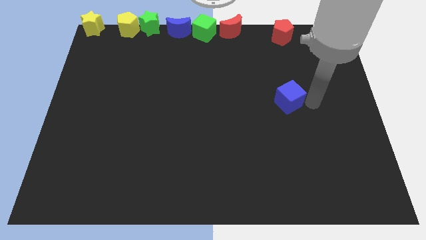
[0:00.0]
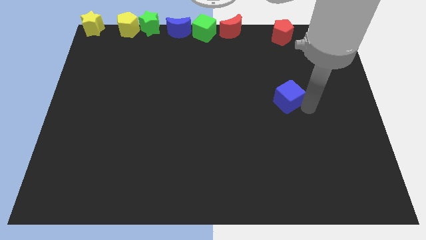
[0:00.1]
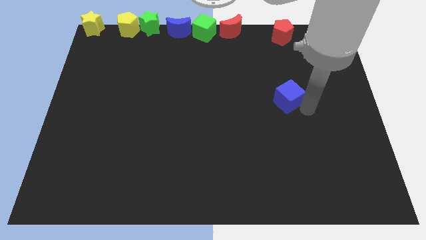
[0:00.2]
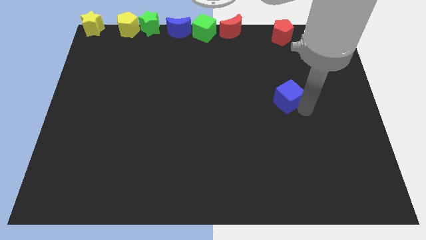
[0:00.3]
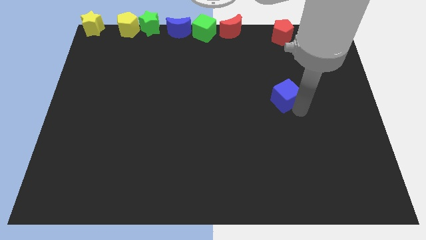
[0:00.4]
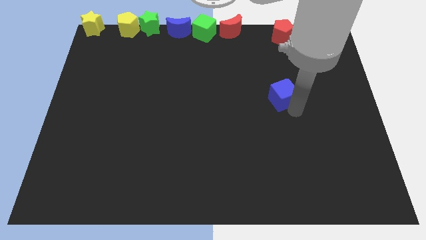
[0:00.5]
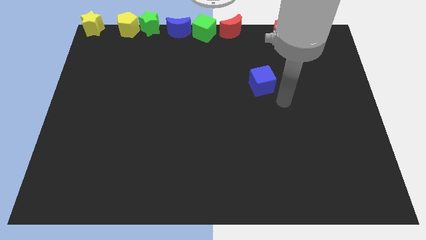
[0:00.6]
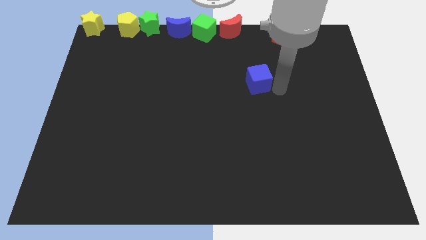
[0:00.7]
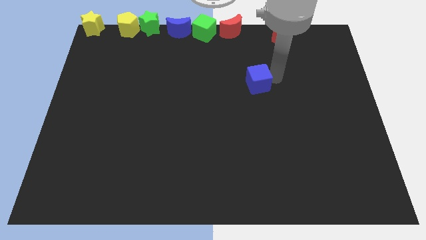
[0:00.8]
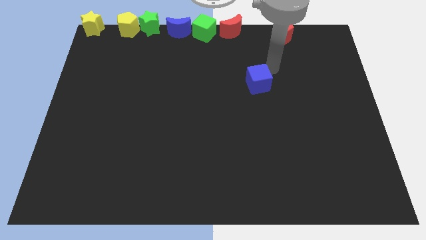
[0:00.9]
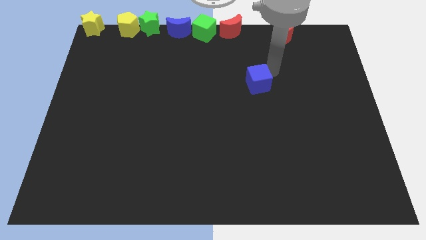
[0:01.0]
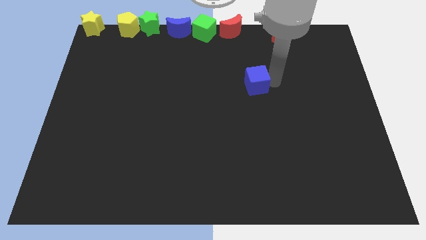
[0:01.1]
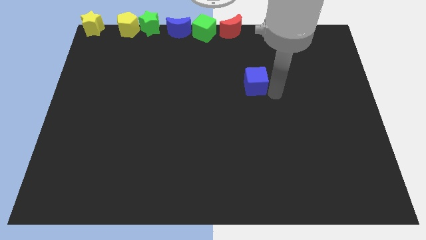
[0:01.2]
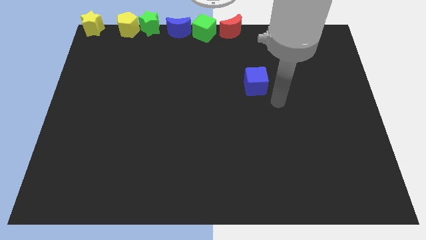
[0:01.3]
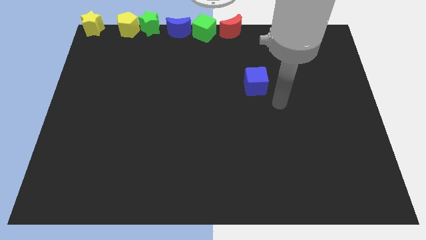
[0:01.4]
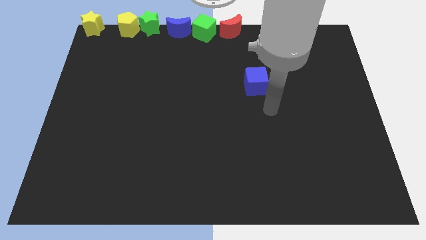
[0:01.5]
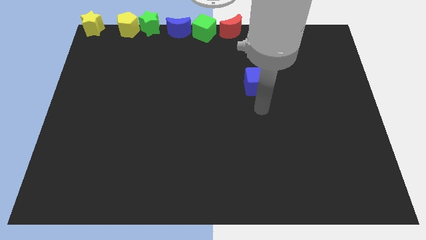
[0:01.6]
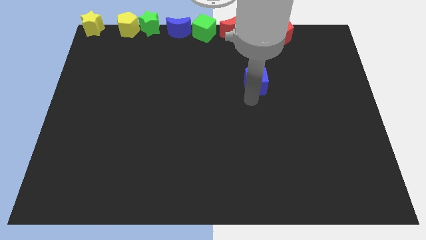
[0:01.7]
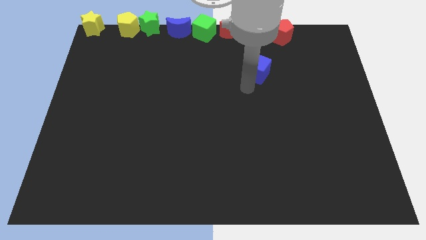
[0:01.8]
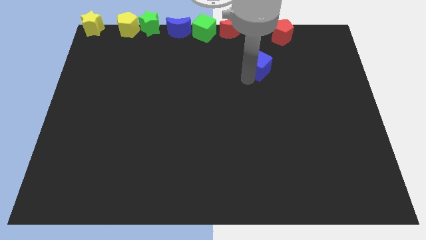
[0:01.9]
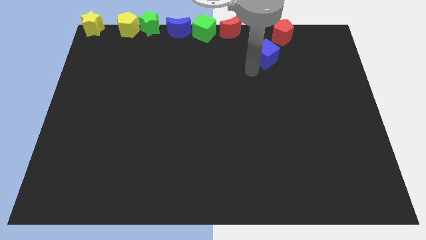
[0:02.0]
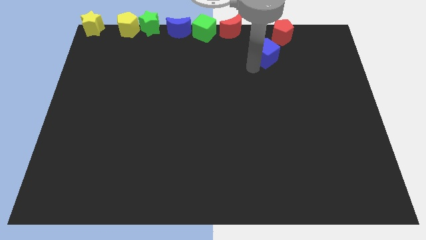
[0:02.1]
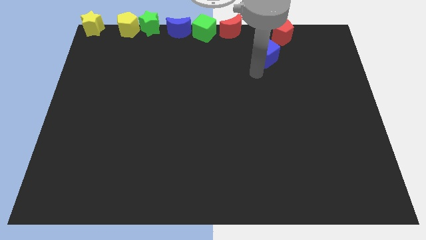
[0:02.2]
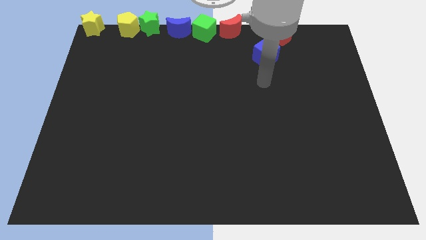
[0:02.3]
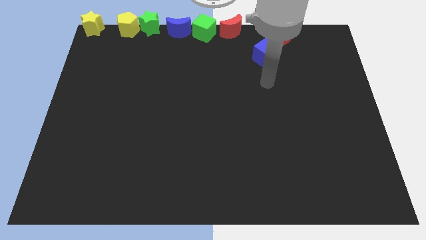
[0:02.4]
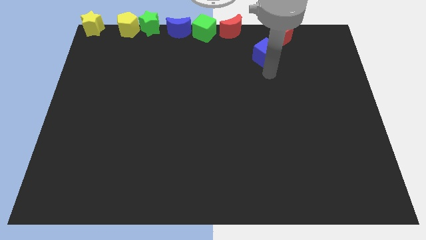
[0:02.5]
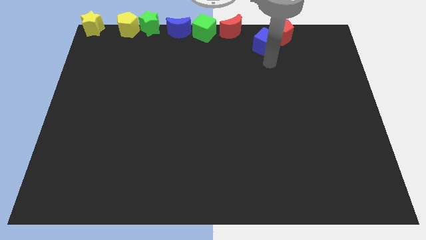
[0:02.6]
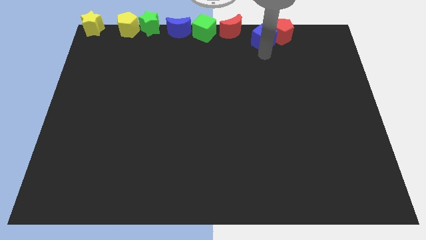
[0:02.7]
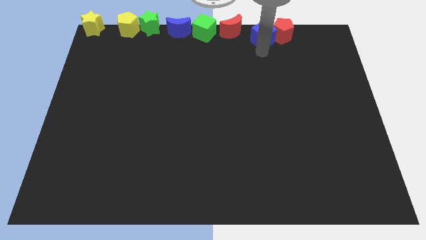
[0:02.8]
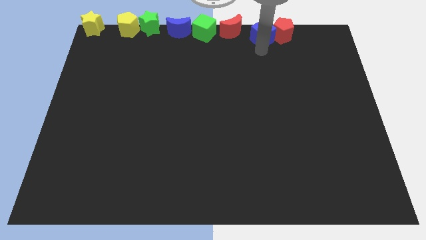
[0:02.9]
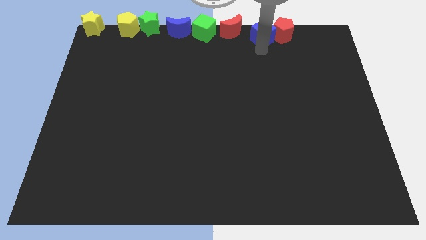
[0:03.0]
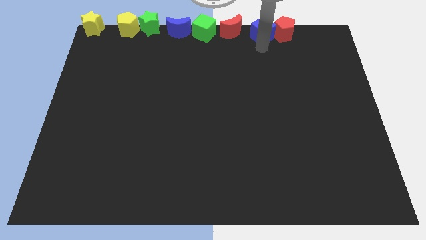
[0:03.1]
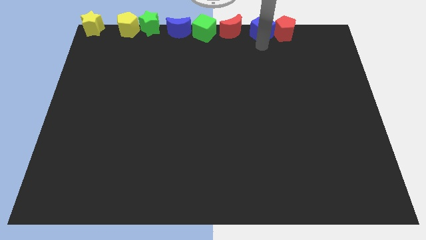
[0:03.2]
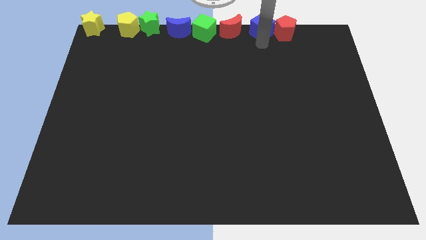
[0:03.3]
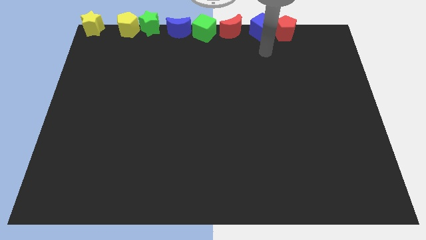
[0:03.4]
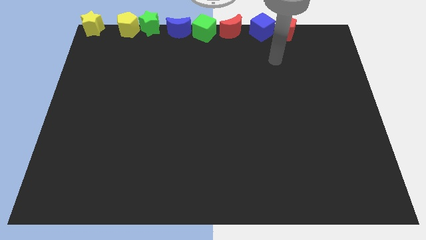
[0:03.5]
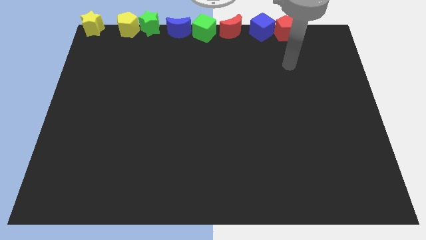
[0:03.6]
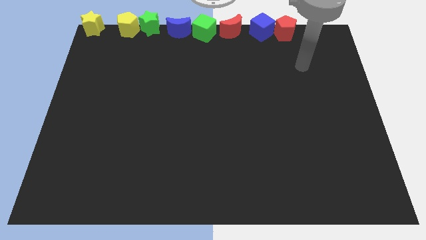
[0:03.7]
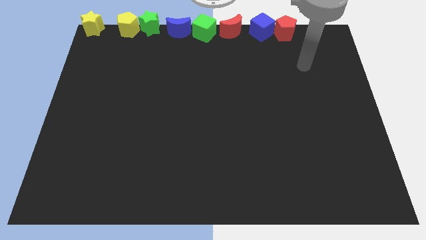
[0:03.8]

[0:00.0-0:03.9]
place the blue cube between red blocks

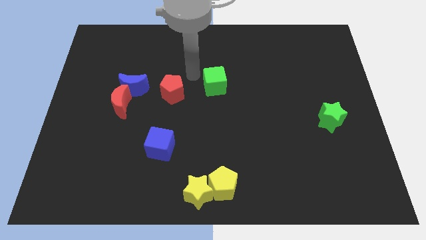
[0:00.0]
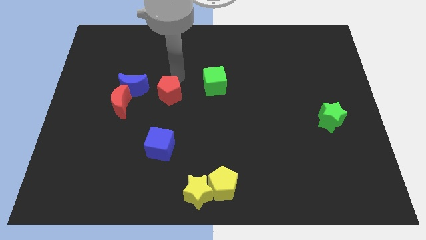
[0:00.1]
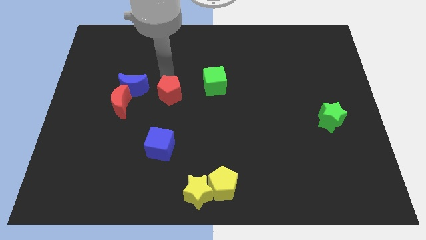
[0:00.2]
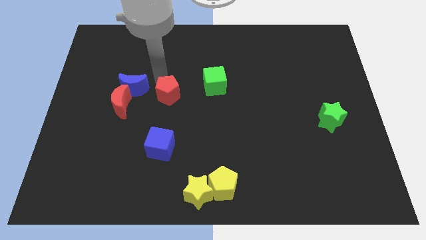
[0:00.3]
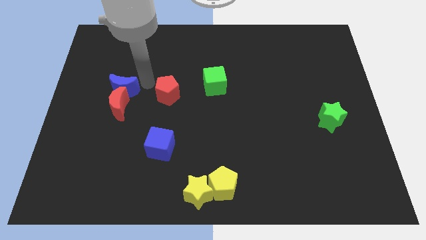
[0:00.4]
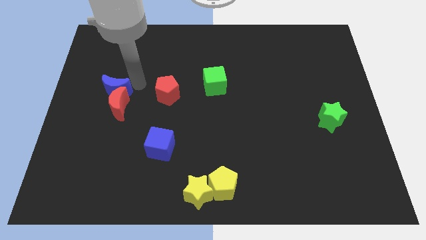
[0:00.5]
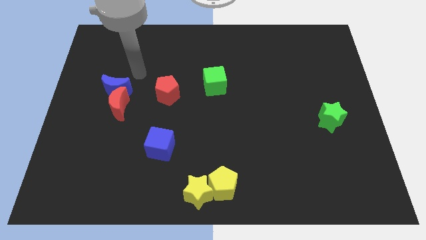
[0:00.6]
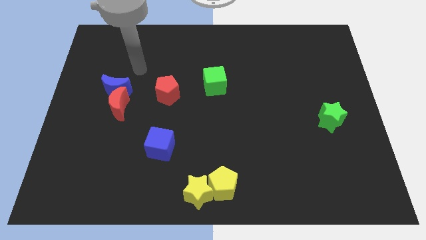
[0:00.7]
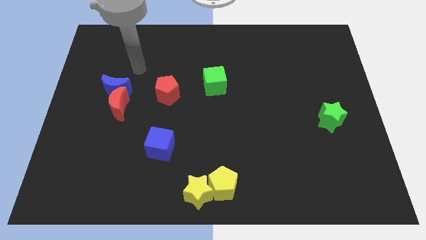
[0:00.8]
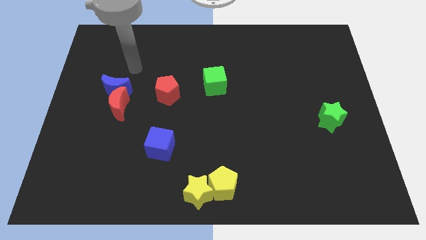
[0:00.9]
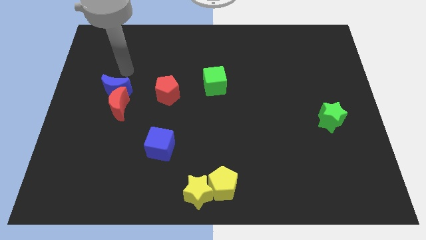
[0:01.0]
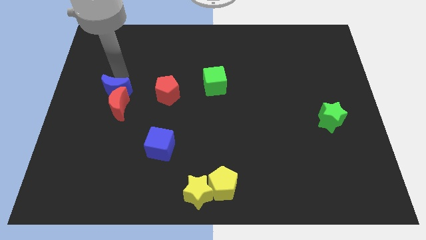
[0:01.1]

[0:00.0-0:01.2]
slightly move the blue moon towards the left

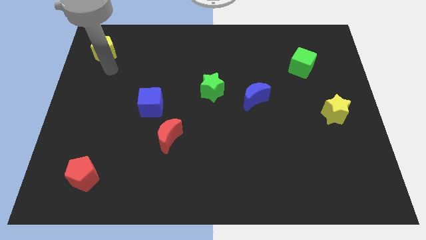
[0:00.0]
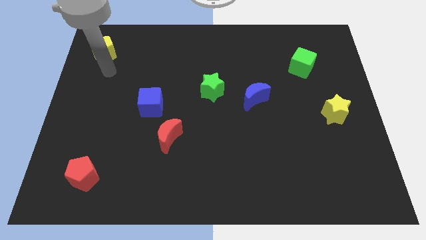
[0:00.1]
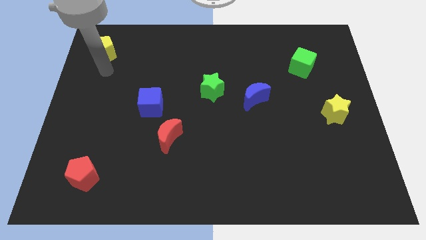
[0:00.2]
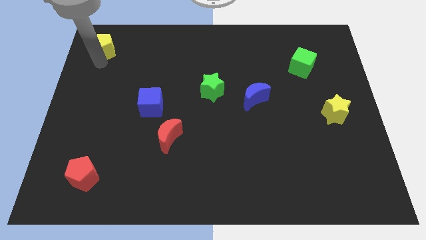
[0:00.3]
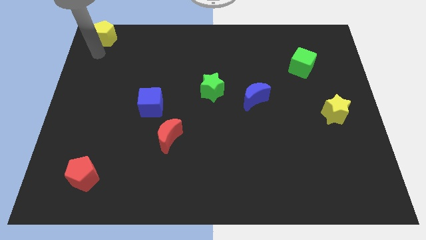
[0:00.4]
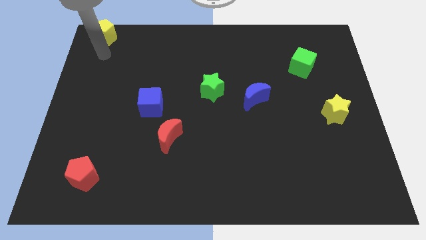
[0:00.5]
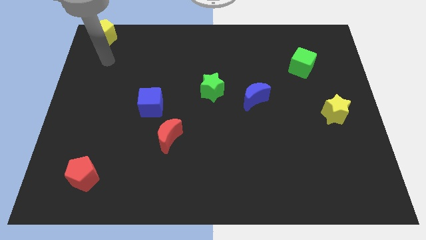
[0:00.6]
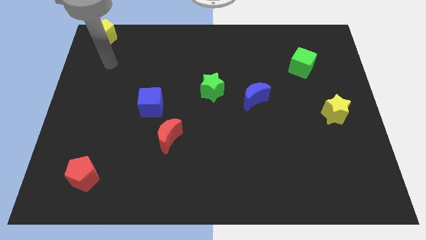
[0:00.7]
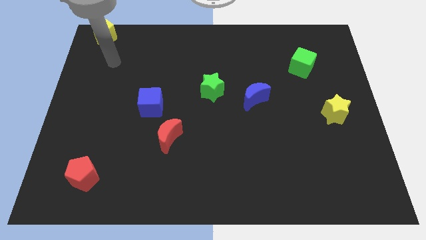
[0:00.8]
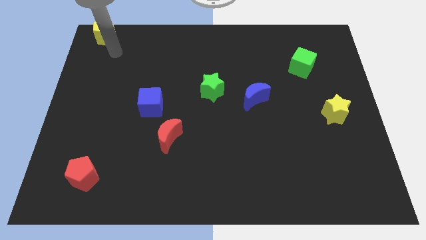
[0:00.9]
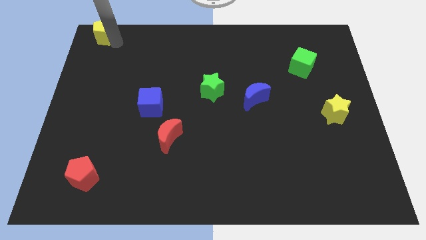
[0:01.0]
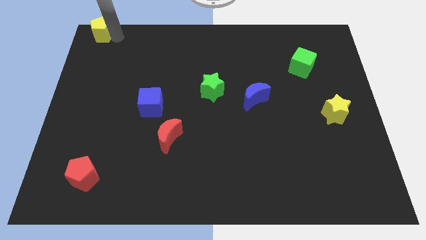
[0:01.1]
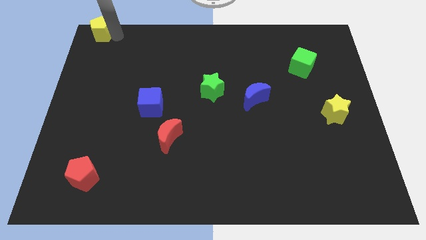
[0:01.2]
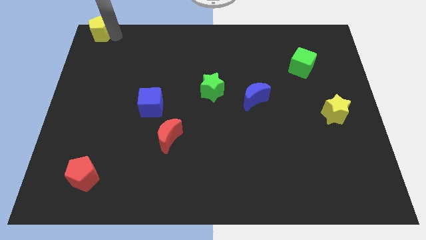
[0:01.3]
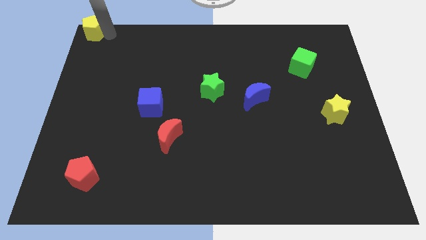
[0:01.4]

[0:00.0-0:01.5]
drag the yellow pentagon to the top left corner

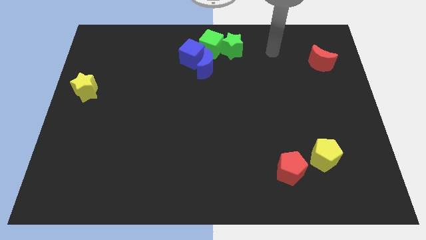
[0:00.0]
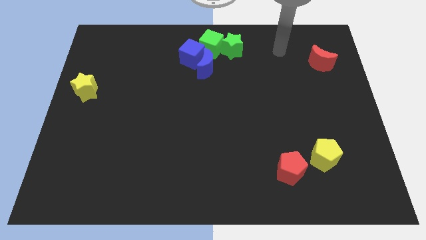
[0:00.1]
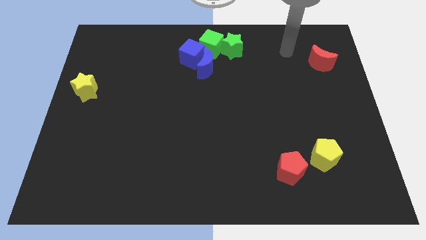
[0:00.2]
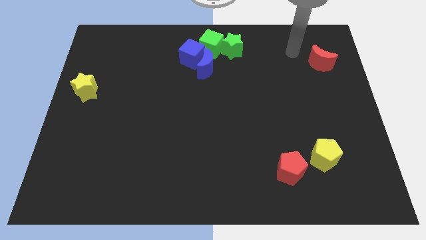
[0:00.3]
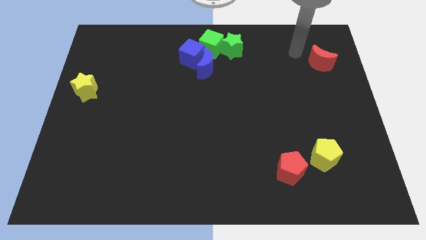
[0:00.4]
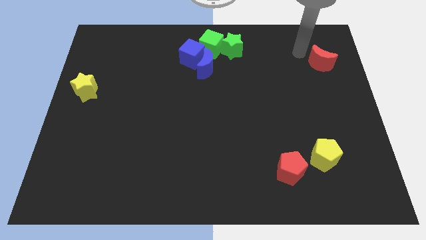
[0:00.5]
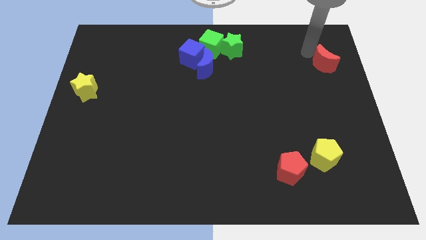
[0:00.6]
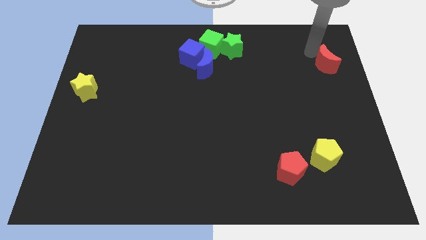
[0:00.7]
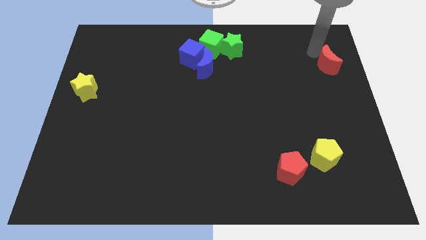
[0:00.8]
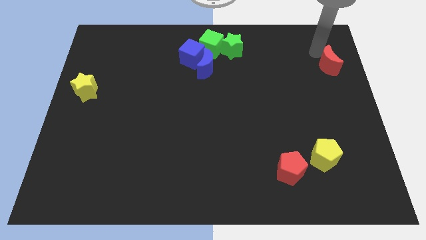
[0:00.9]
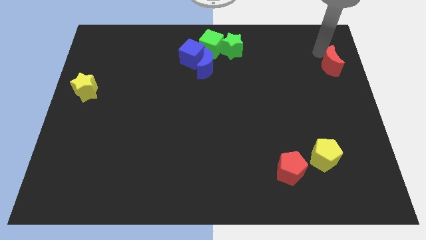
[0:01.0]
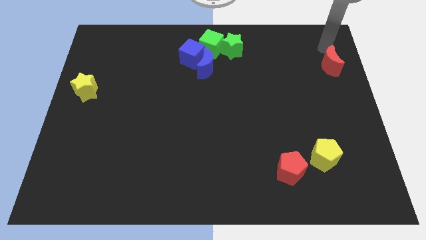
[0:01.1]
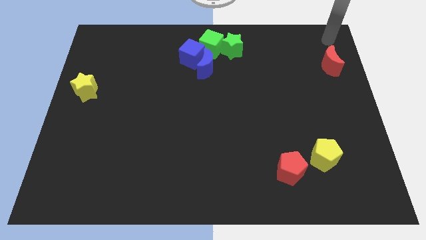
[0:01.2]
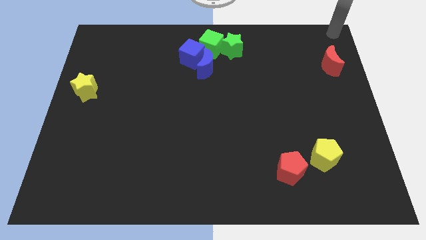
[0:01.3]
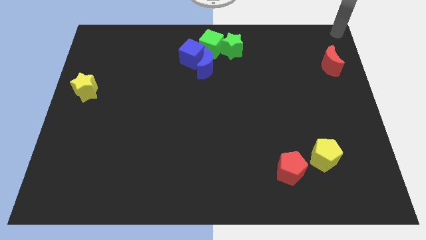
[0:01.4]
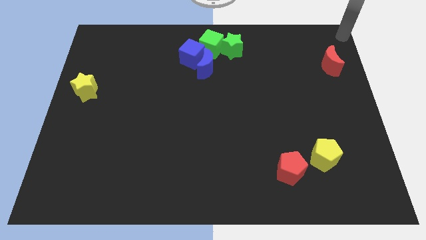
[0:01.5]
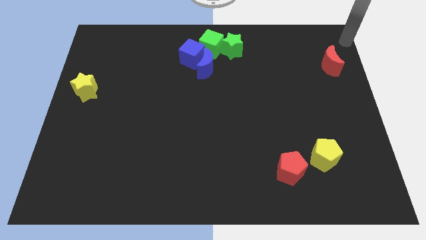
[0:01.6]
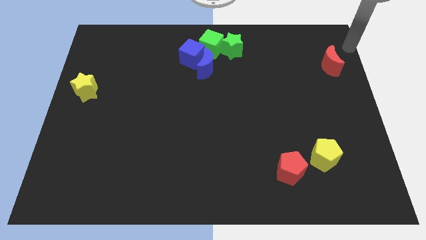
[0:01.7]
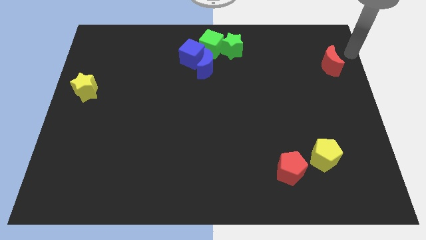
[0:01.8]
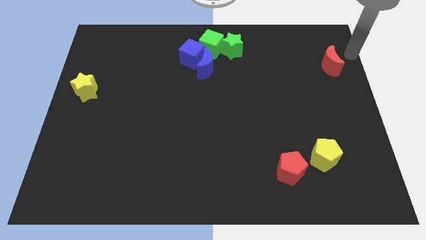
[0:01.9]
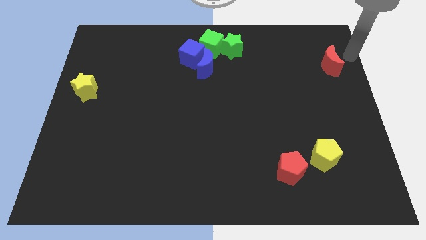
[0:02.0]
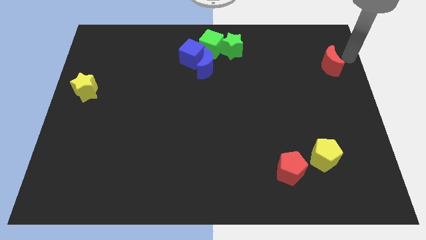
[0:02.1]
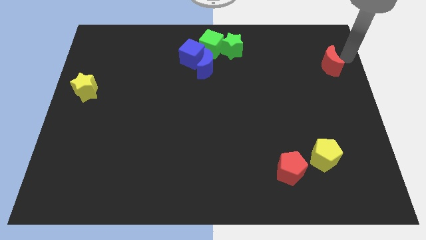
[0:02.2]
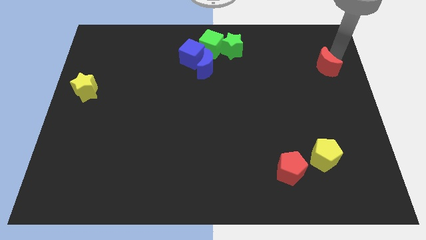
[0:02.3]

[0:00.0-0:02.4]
move the red crescent slightly to the right side of the board
